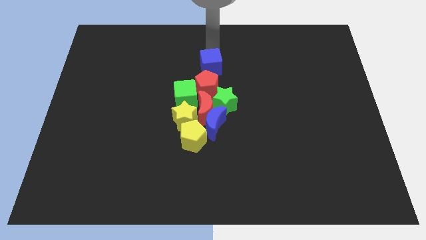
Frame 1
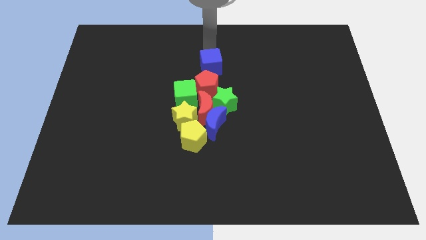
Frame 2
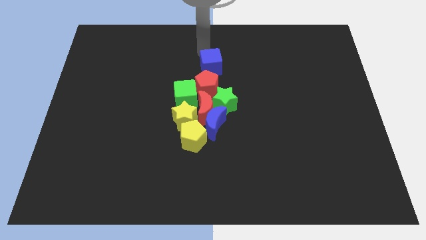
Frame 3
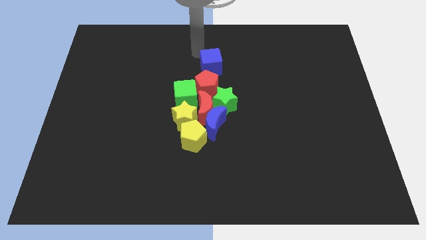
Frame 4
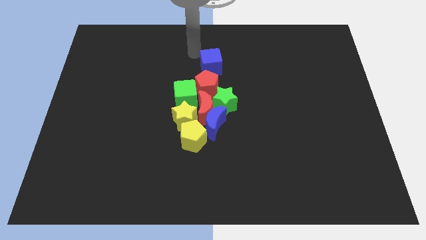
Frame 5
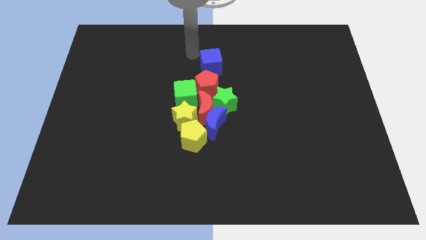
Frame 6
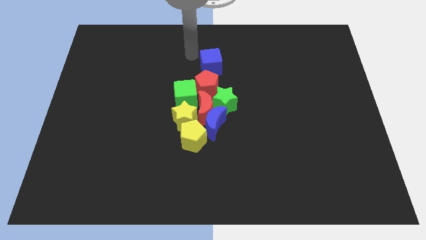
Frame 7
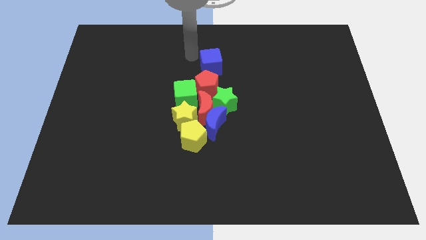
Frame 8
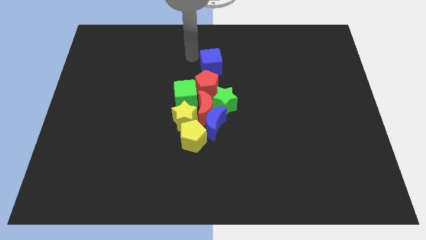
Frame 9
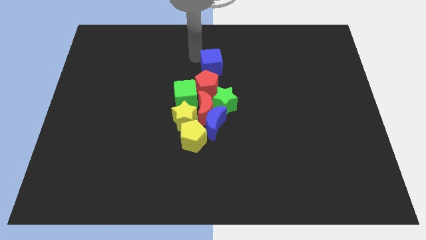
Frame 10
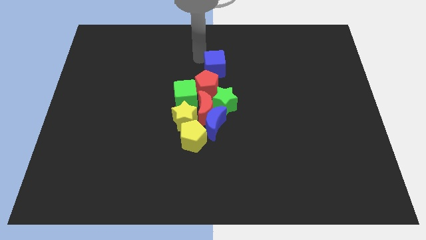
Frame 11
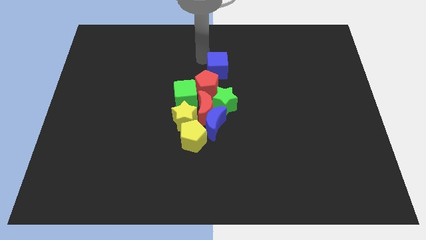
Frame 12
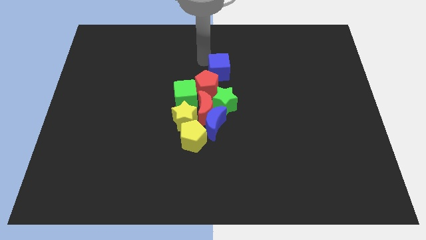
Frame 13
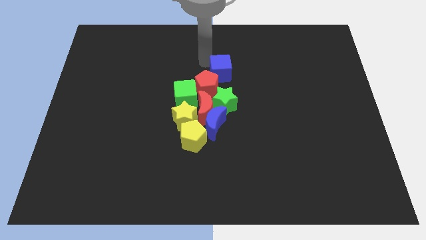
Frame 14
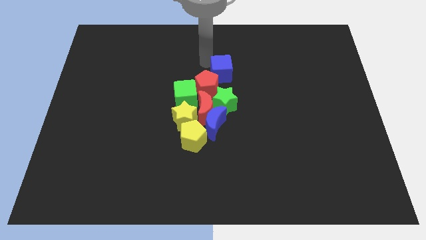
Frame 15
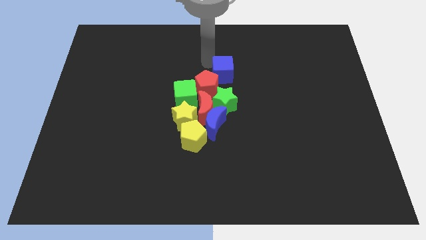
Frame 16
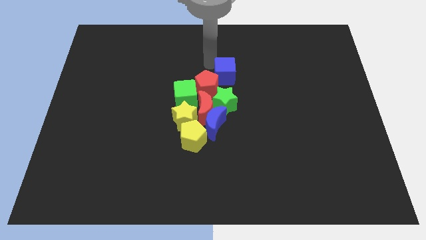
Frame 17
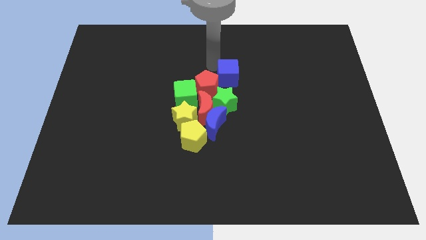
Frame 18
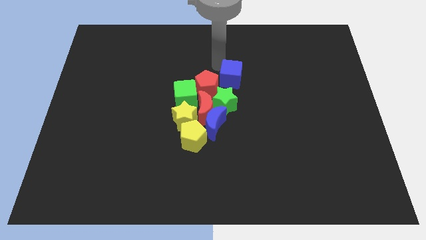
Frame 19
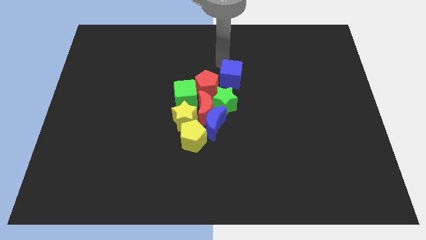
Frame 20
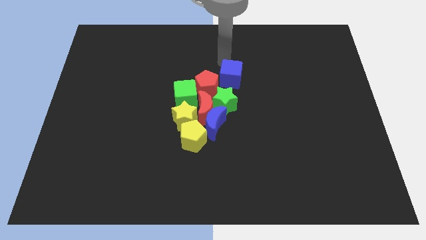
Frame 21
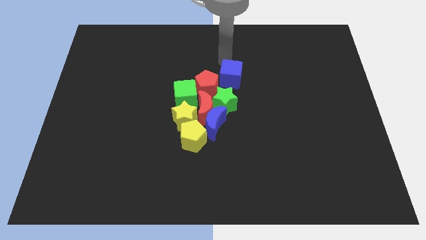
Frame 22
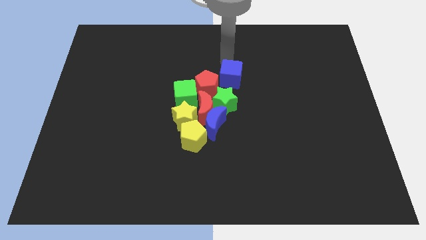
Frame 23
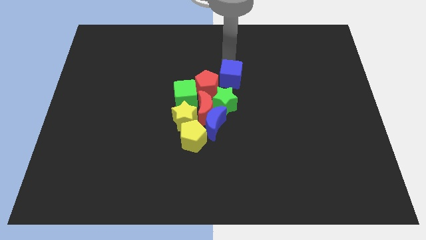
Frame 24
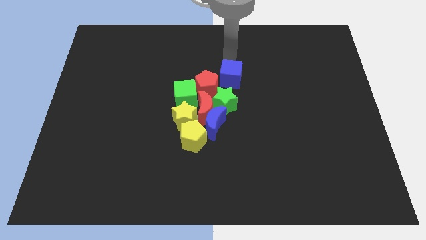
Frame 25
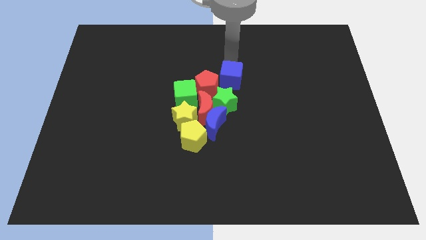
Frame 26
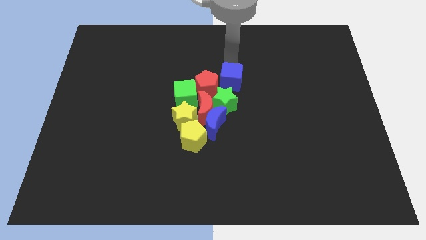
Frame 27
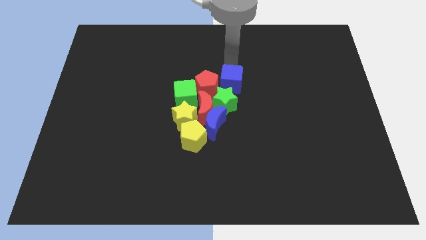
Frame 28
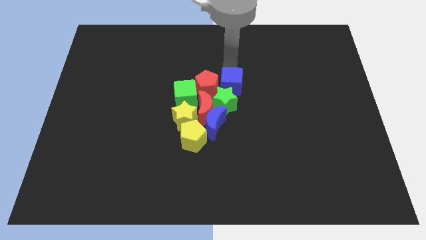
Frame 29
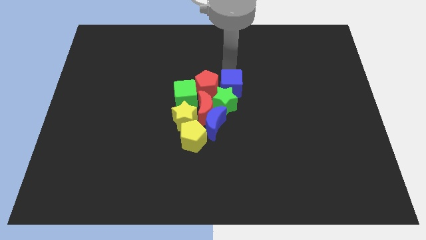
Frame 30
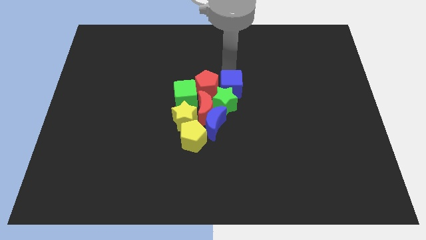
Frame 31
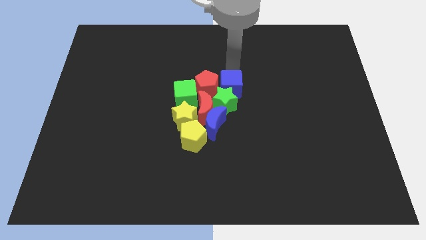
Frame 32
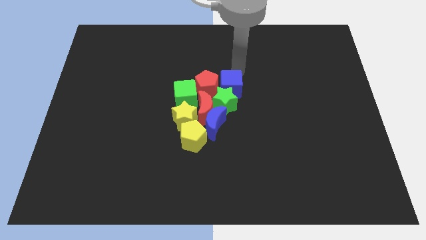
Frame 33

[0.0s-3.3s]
place the blue cube adjacent to the red pentagon

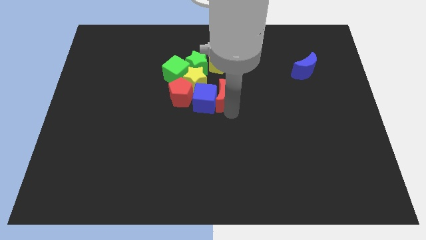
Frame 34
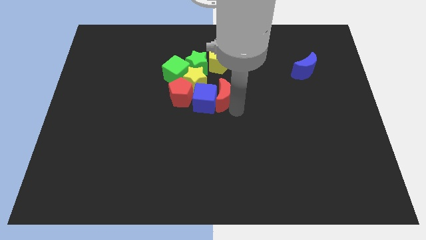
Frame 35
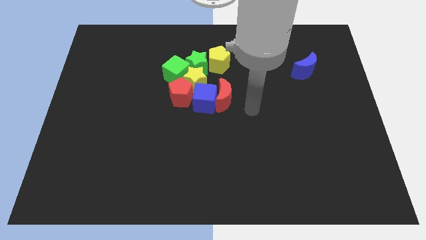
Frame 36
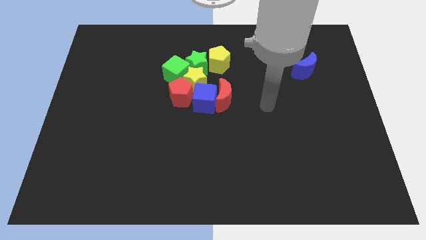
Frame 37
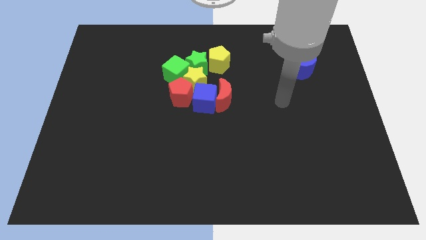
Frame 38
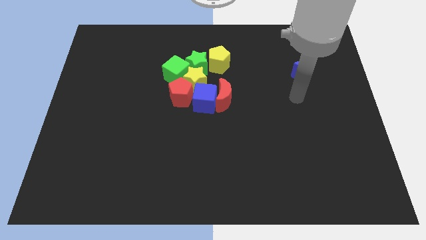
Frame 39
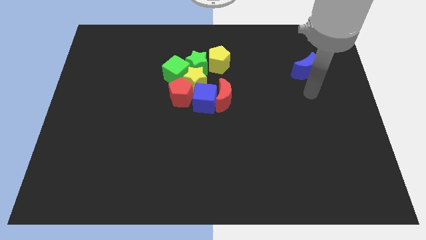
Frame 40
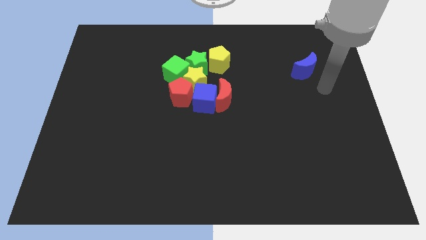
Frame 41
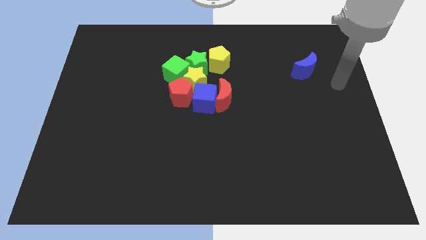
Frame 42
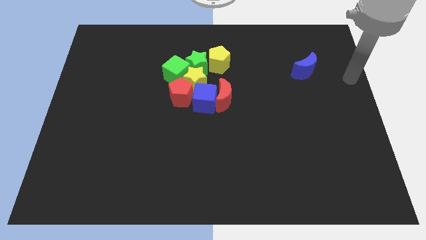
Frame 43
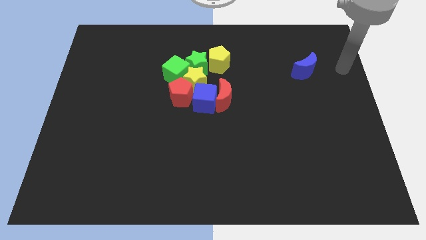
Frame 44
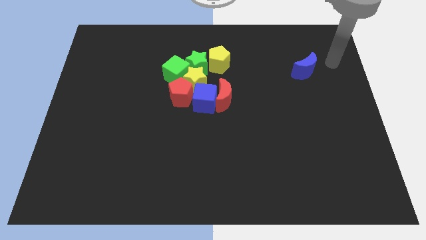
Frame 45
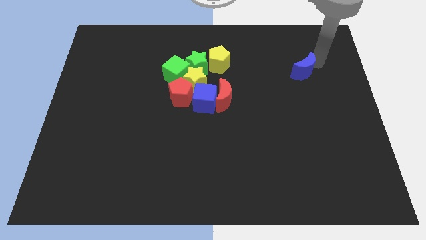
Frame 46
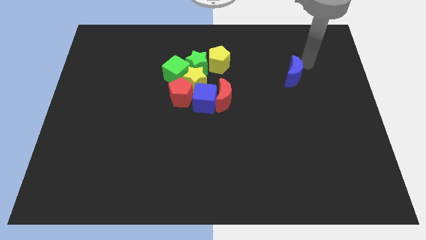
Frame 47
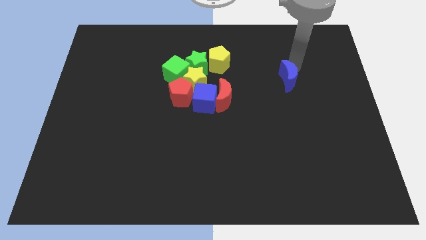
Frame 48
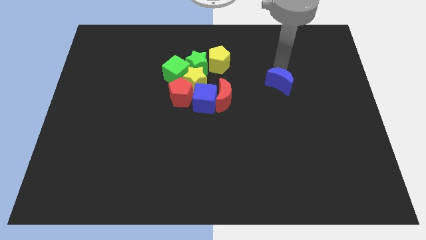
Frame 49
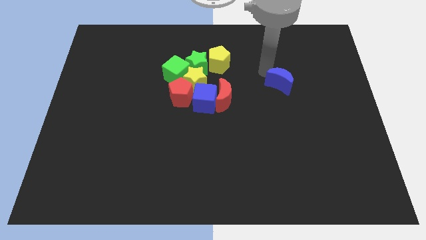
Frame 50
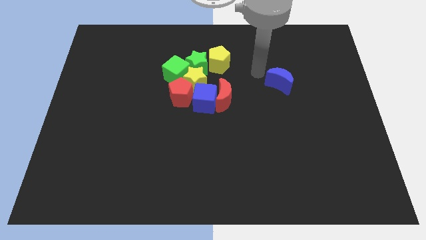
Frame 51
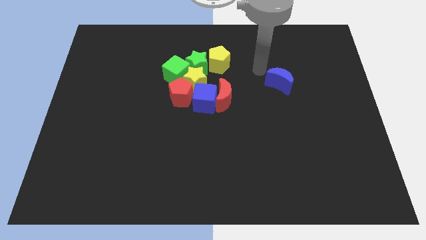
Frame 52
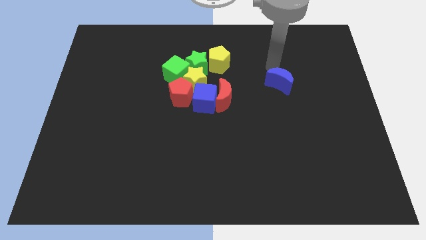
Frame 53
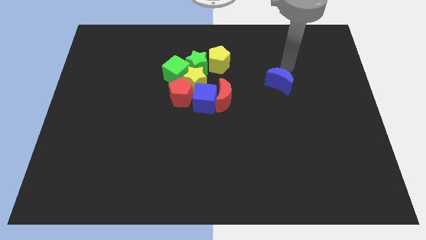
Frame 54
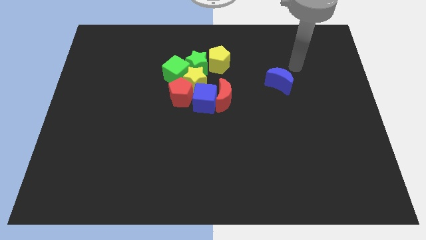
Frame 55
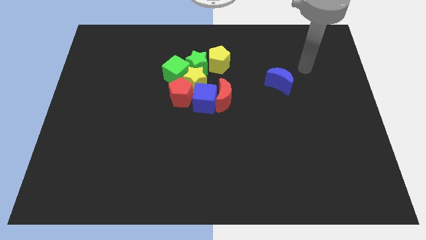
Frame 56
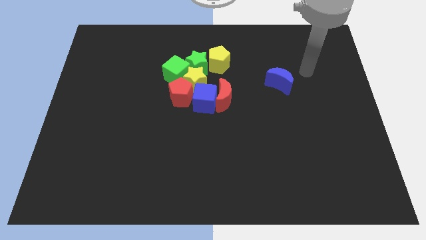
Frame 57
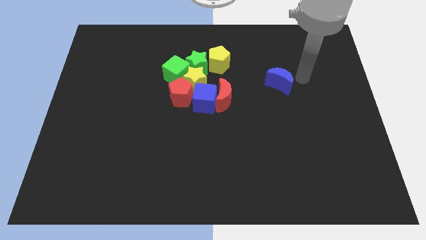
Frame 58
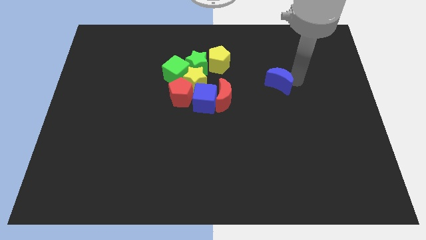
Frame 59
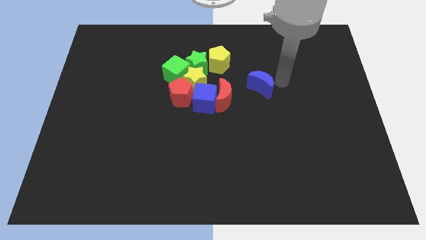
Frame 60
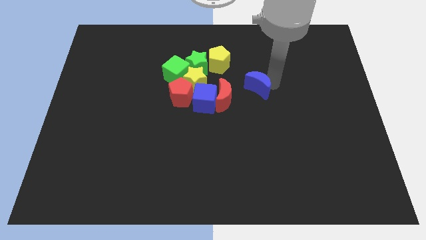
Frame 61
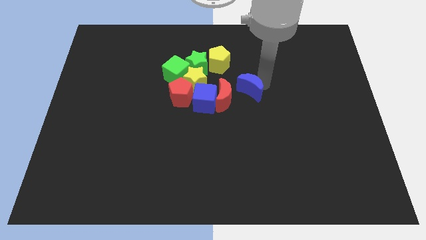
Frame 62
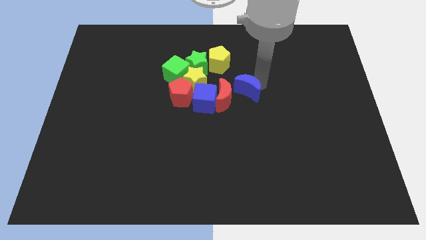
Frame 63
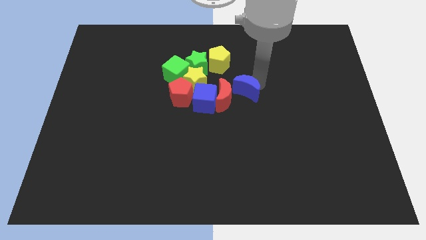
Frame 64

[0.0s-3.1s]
push the blue crescent towards the top right of the red crescent

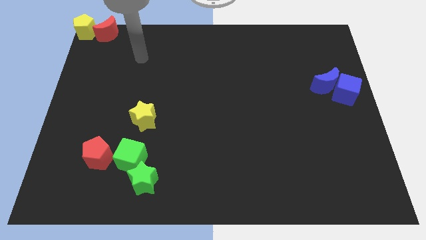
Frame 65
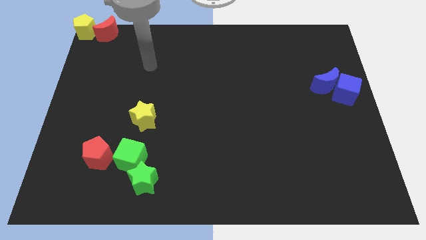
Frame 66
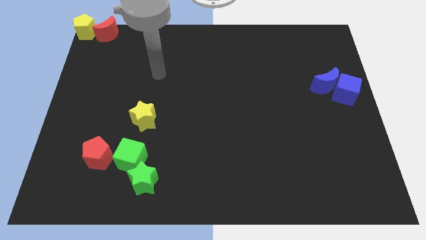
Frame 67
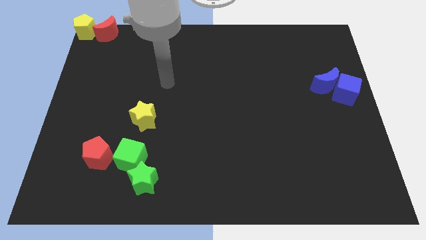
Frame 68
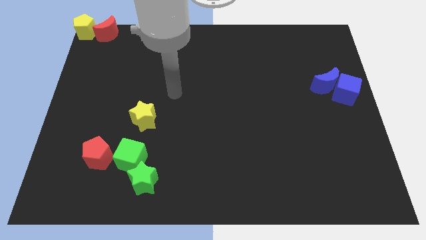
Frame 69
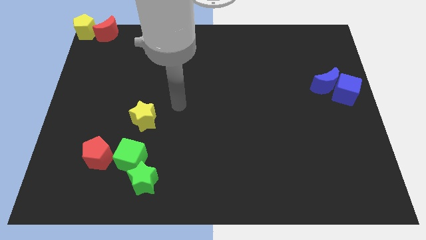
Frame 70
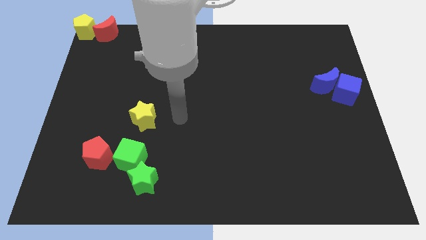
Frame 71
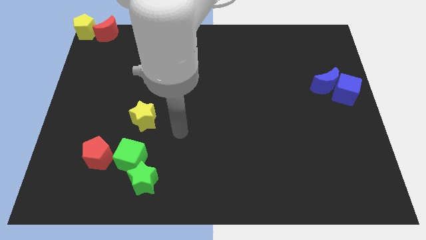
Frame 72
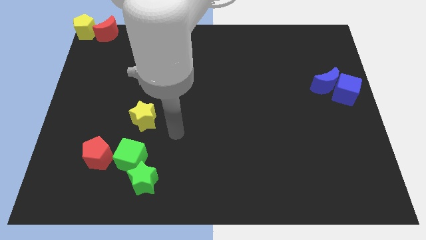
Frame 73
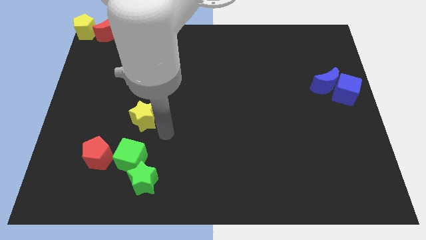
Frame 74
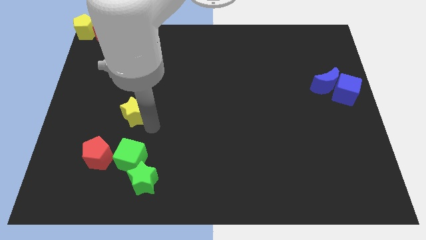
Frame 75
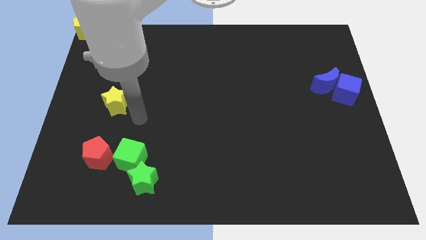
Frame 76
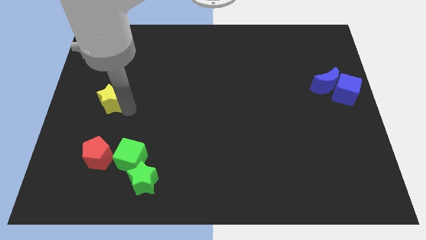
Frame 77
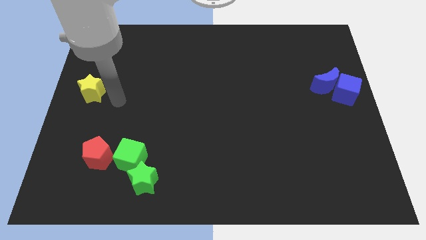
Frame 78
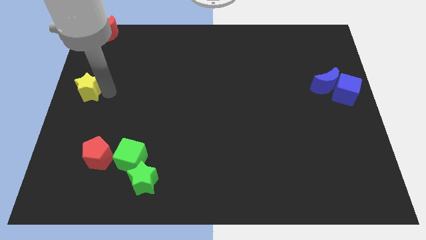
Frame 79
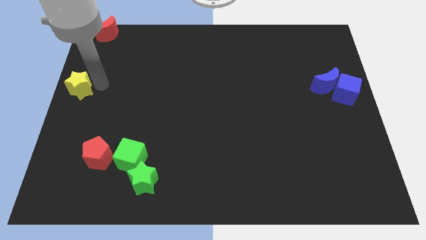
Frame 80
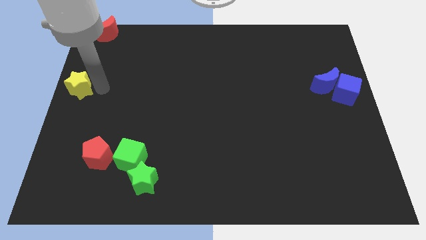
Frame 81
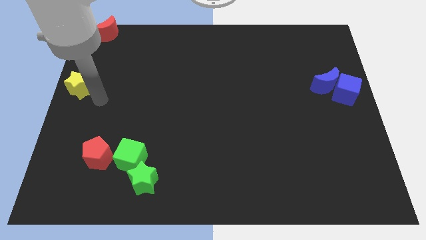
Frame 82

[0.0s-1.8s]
place the yellow star to the bottom of the yellow pentagon

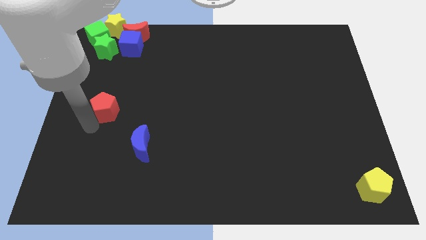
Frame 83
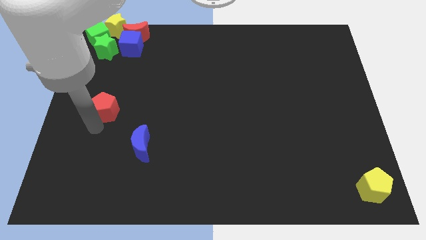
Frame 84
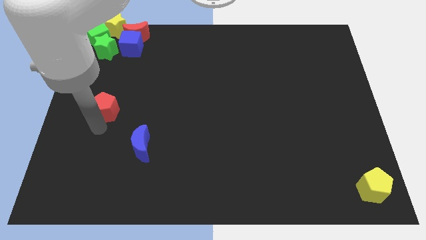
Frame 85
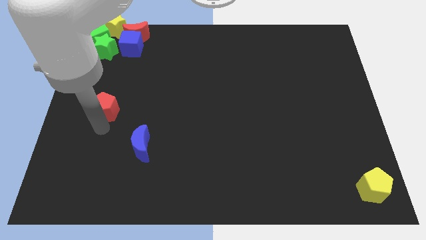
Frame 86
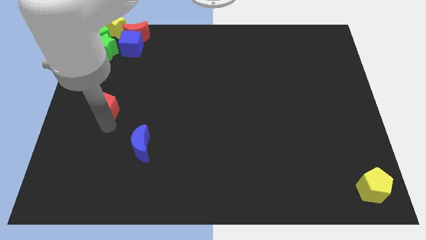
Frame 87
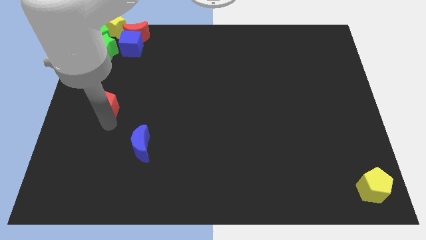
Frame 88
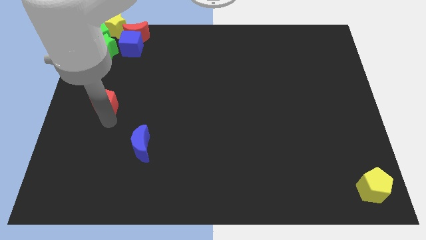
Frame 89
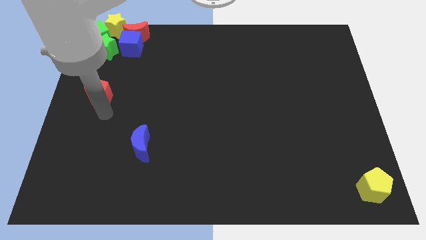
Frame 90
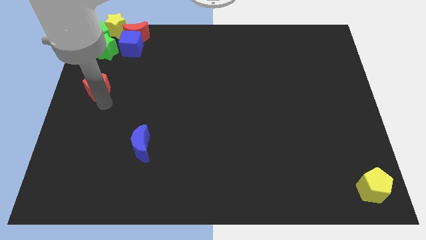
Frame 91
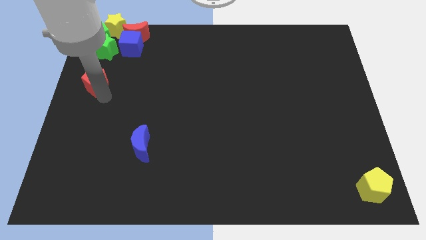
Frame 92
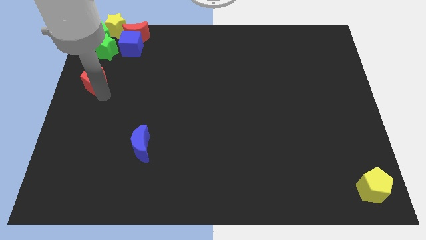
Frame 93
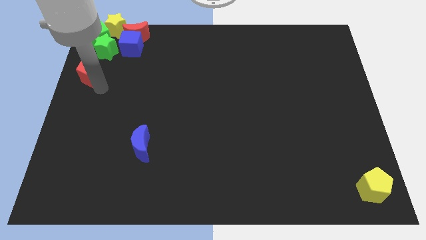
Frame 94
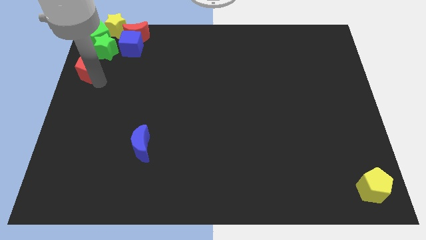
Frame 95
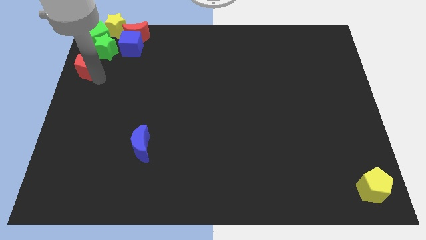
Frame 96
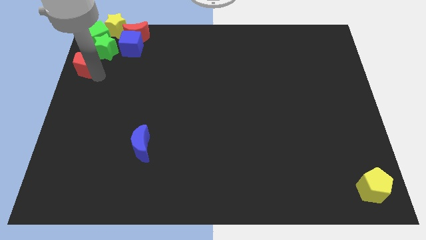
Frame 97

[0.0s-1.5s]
drag the red pentagon towards the green star
